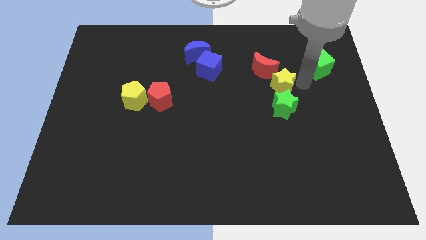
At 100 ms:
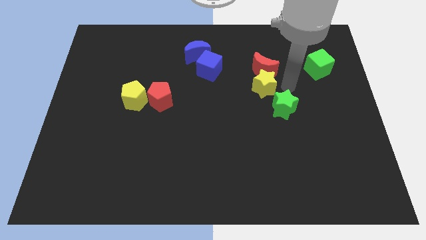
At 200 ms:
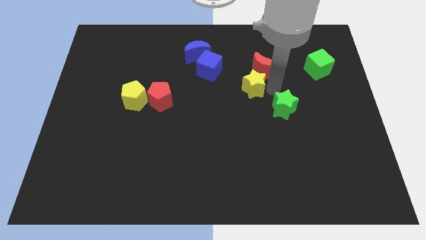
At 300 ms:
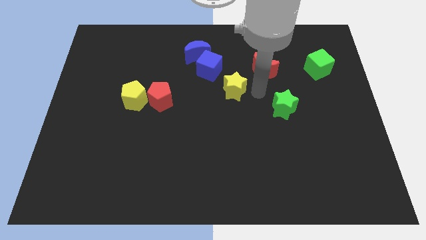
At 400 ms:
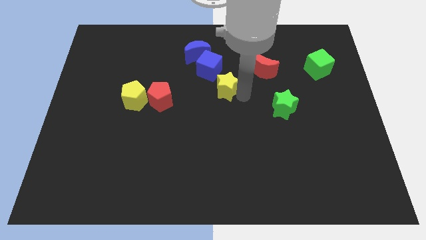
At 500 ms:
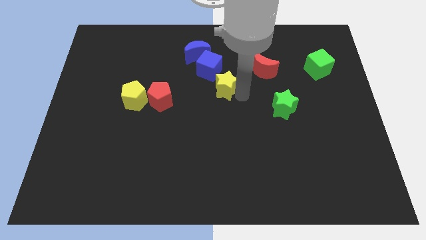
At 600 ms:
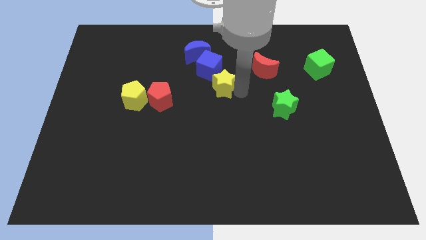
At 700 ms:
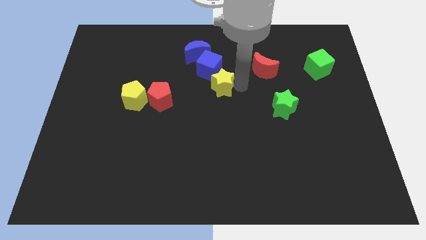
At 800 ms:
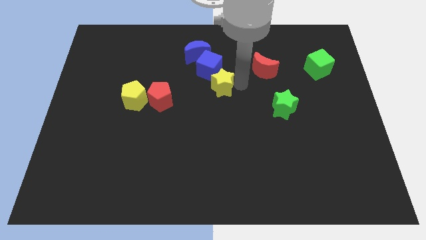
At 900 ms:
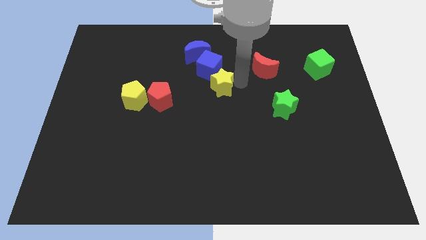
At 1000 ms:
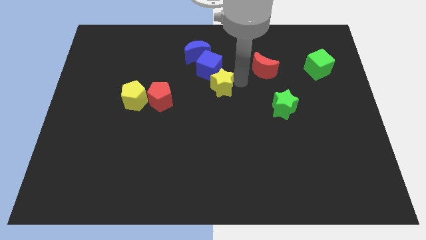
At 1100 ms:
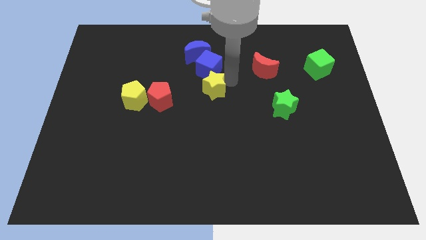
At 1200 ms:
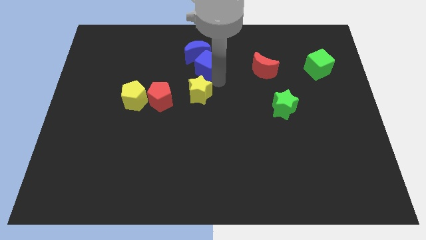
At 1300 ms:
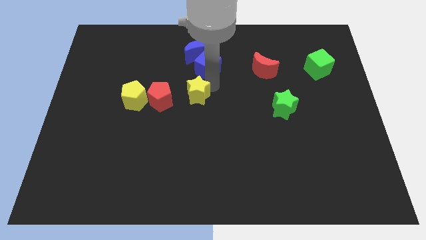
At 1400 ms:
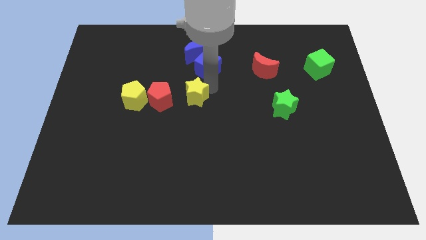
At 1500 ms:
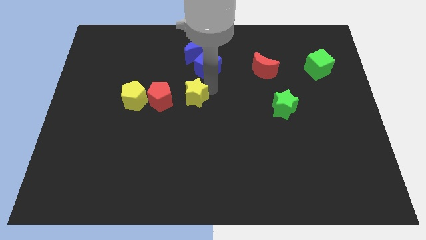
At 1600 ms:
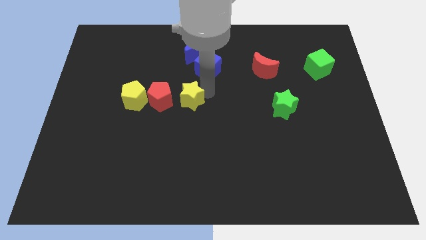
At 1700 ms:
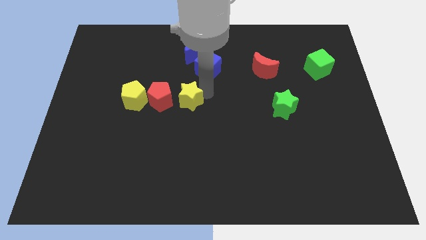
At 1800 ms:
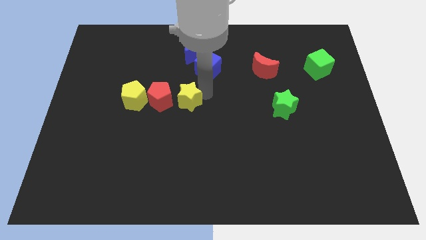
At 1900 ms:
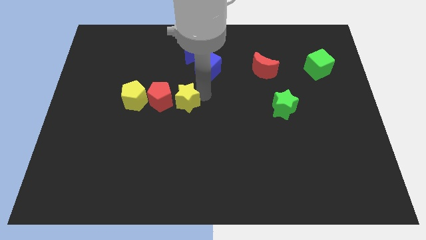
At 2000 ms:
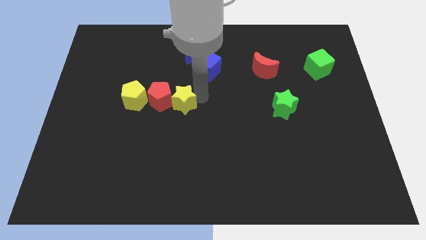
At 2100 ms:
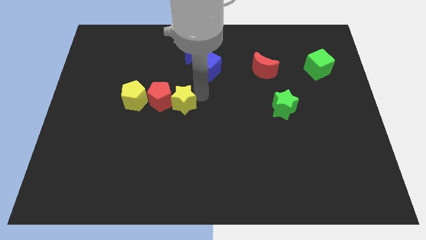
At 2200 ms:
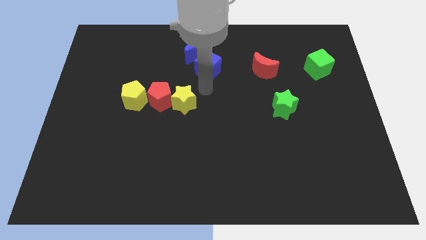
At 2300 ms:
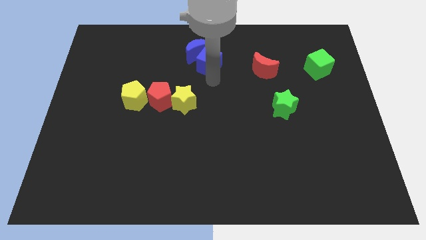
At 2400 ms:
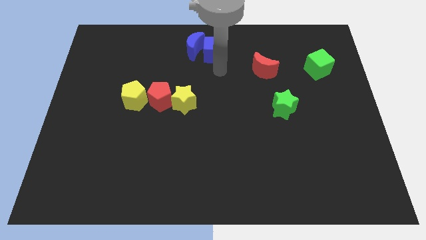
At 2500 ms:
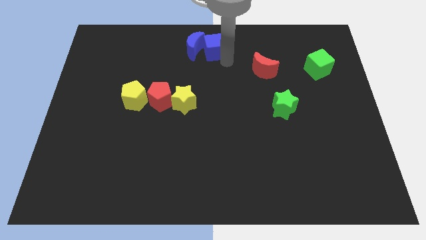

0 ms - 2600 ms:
place the yellow star right to red pentagon

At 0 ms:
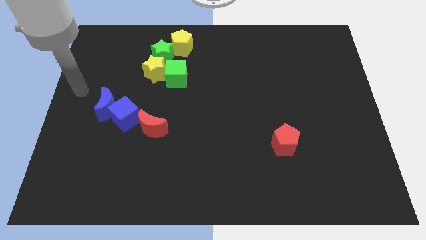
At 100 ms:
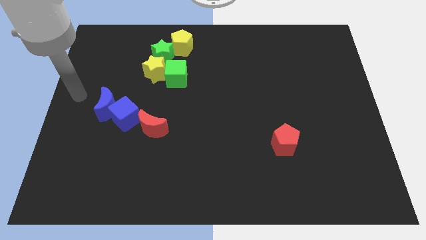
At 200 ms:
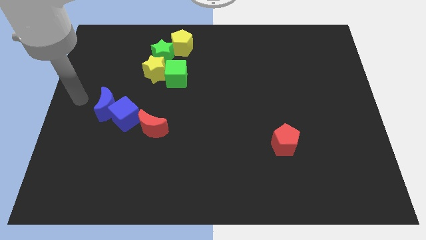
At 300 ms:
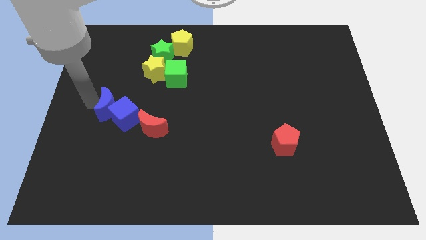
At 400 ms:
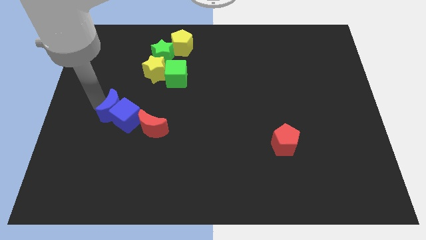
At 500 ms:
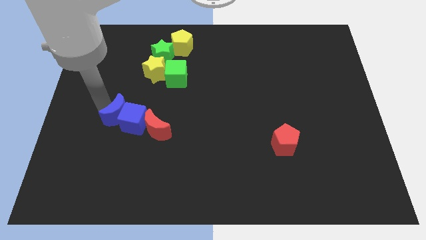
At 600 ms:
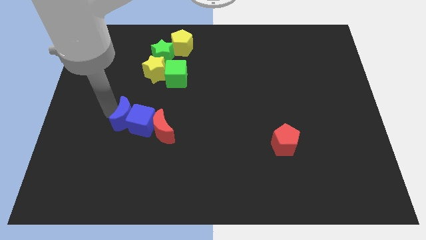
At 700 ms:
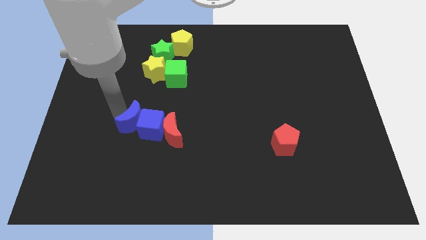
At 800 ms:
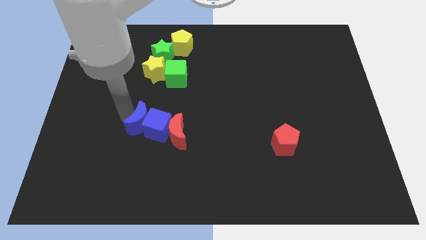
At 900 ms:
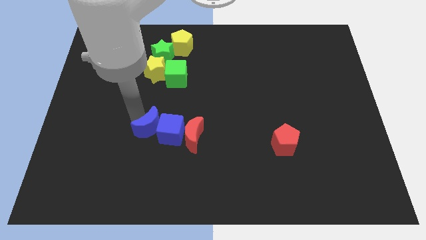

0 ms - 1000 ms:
slide the blue blocks and the red moon to the right

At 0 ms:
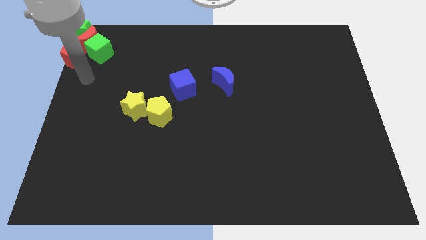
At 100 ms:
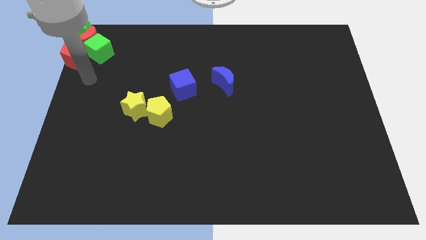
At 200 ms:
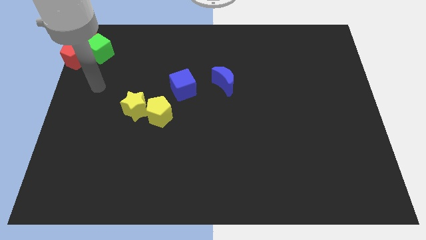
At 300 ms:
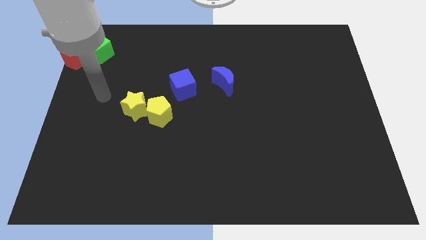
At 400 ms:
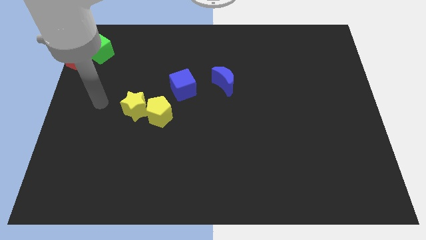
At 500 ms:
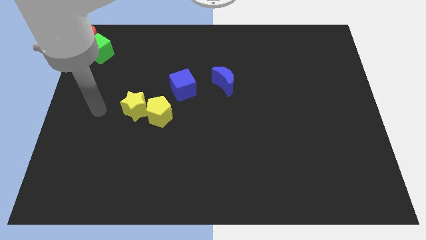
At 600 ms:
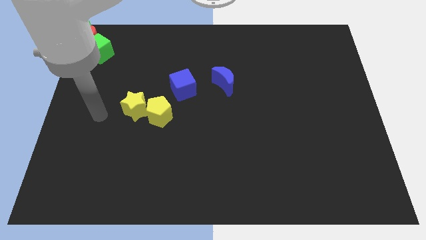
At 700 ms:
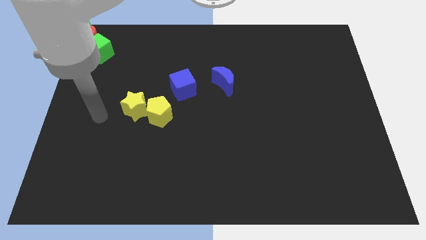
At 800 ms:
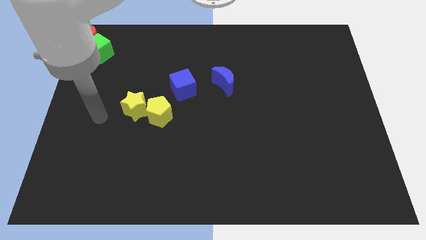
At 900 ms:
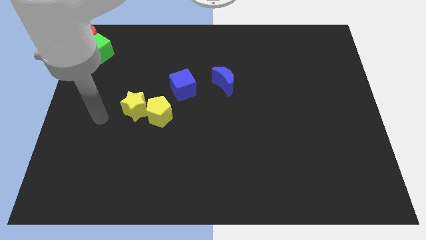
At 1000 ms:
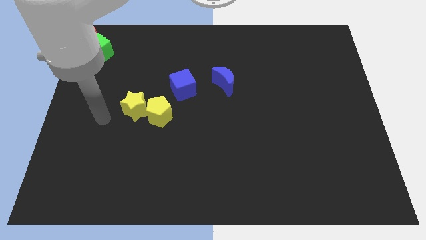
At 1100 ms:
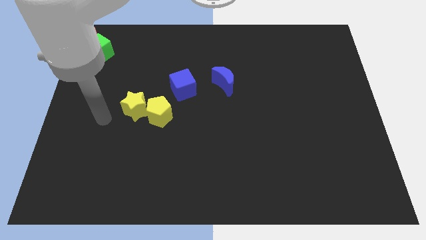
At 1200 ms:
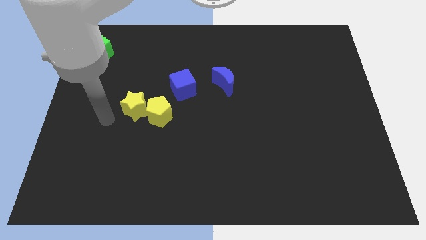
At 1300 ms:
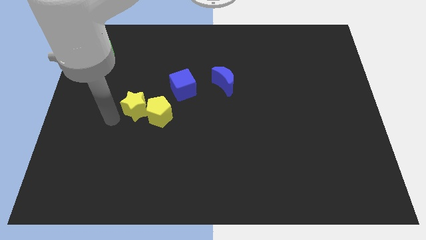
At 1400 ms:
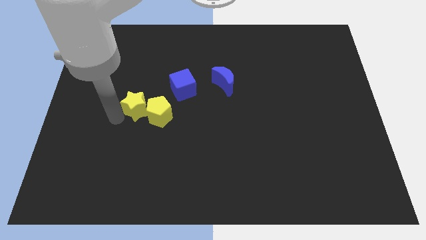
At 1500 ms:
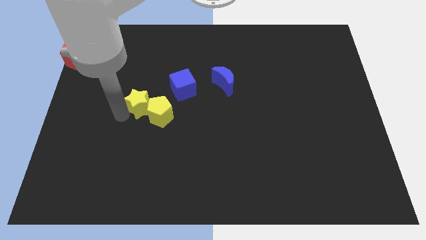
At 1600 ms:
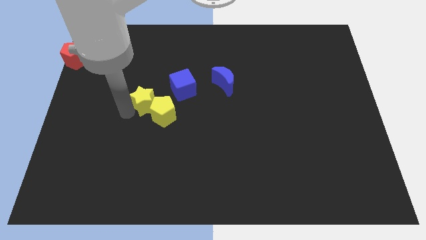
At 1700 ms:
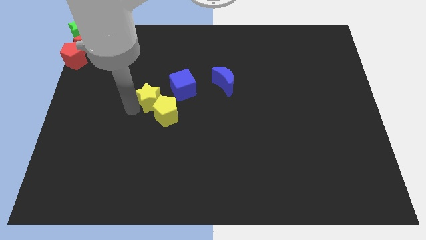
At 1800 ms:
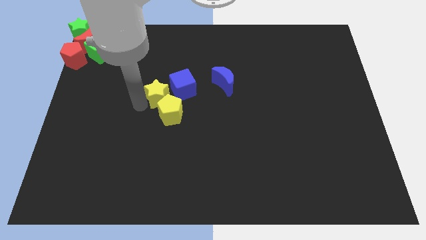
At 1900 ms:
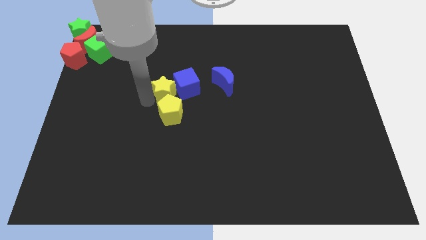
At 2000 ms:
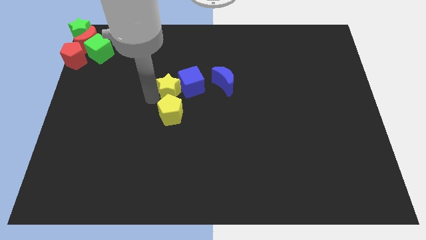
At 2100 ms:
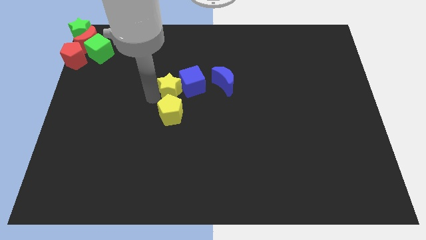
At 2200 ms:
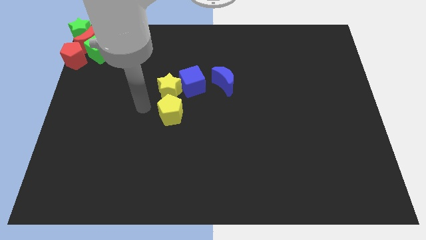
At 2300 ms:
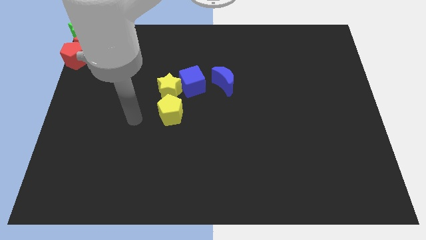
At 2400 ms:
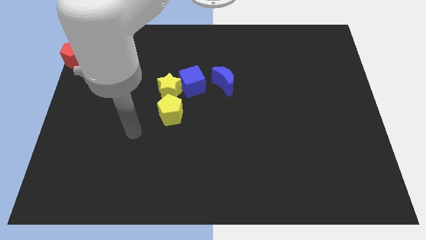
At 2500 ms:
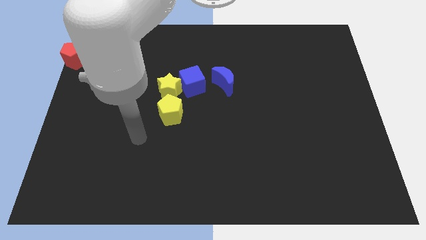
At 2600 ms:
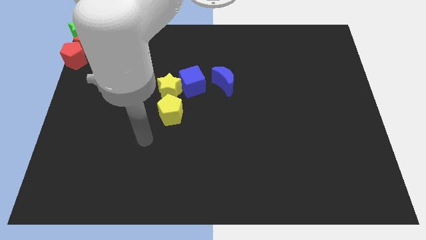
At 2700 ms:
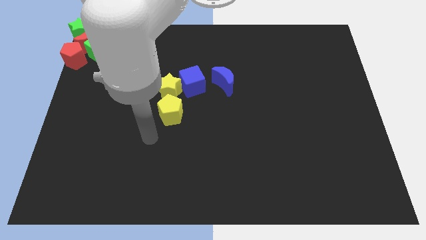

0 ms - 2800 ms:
make the yellow star to touch the blue cube

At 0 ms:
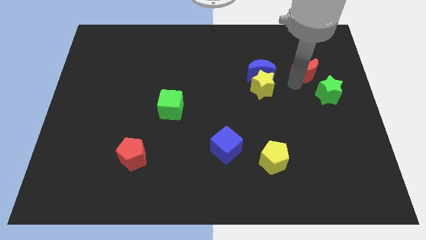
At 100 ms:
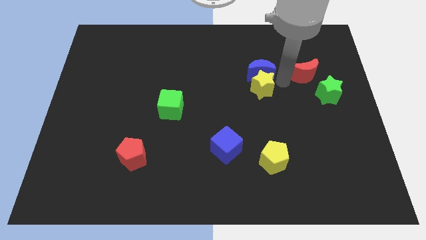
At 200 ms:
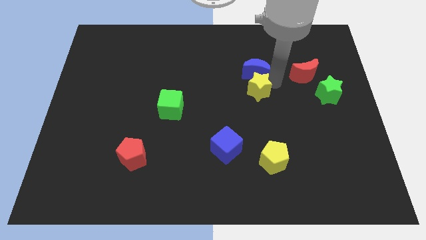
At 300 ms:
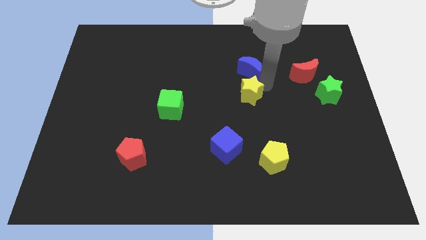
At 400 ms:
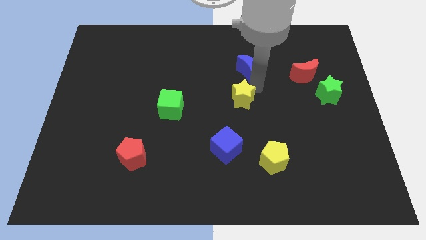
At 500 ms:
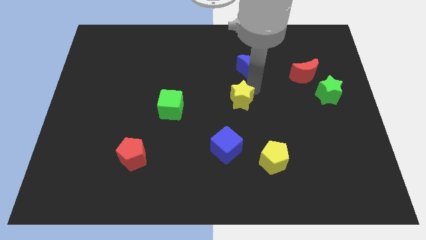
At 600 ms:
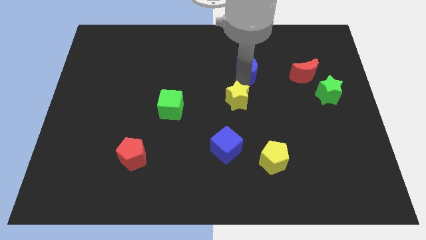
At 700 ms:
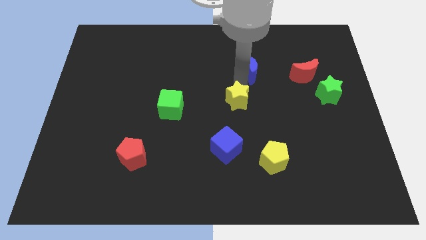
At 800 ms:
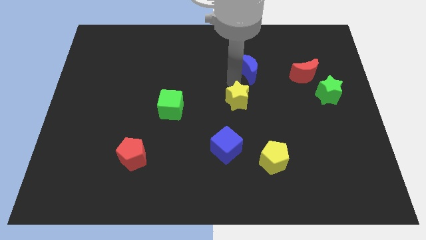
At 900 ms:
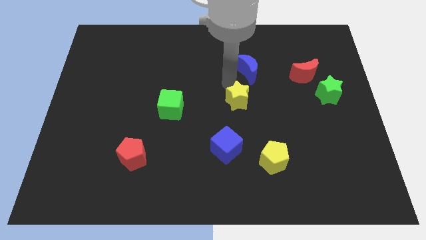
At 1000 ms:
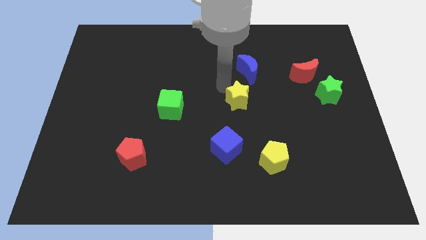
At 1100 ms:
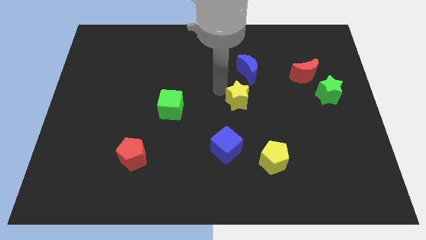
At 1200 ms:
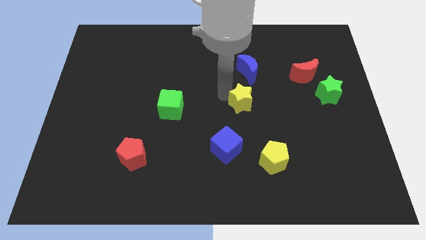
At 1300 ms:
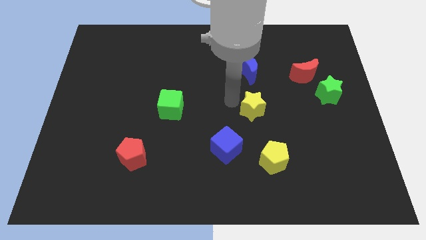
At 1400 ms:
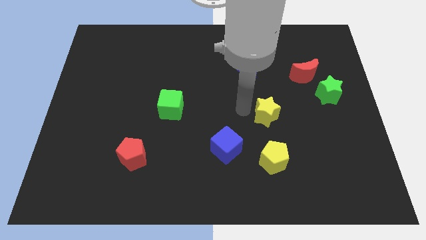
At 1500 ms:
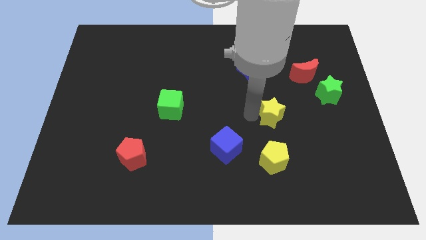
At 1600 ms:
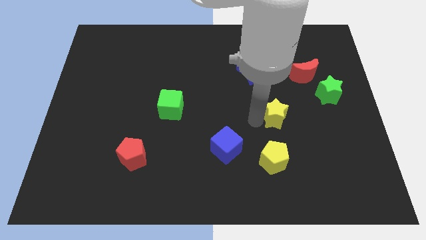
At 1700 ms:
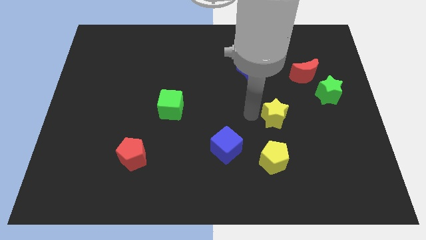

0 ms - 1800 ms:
move yellow star away from the blue mooon

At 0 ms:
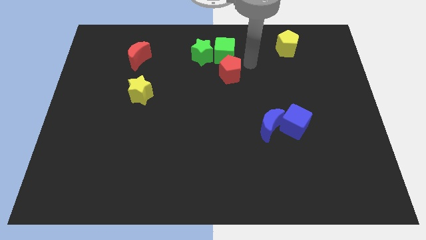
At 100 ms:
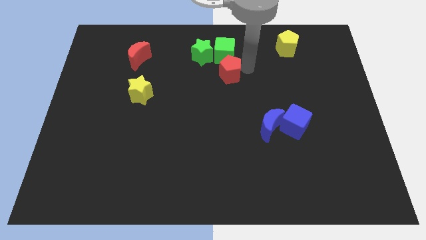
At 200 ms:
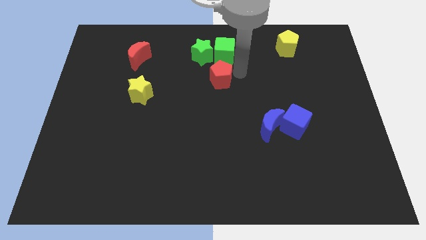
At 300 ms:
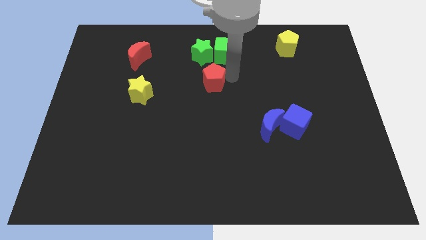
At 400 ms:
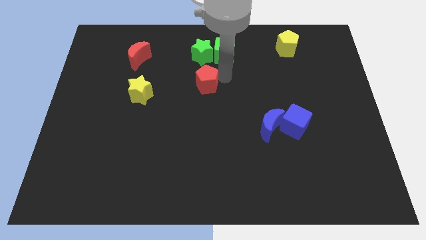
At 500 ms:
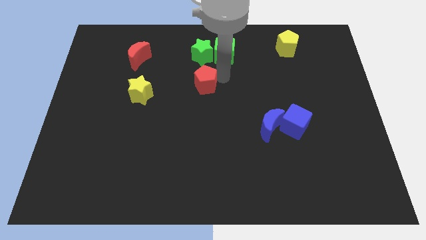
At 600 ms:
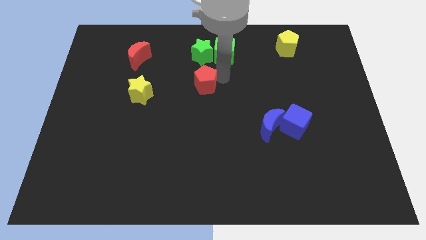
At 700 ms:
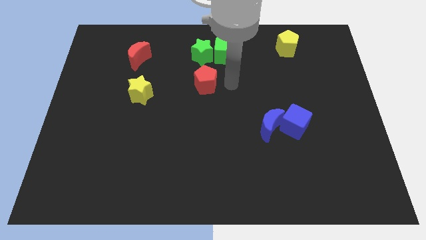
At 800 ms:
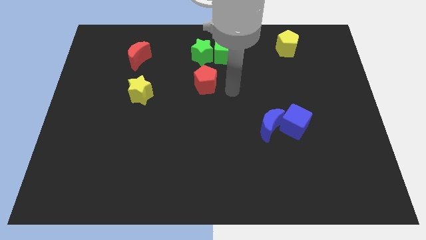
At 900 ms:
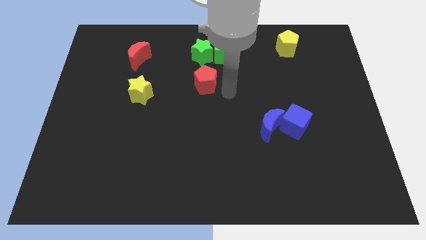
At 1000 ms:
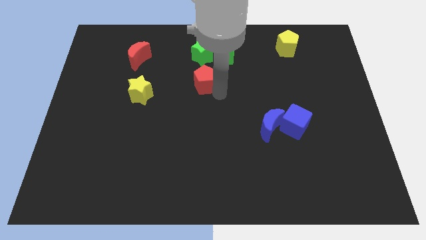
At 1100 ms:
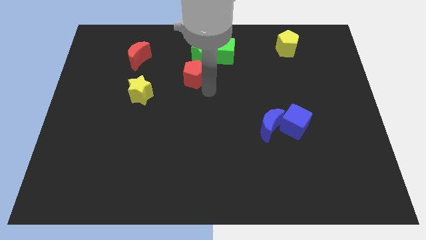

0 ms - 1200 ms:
move the red pentagon to the bottom of the green star
